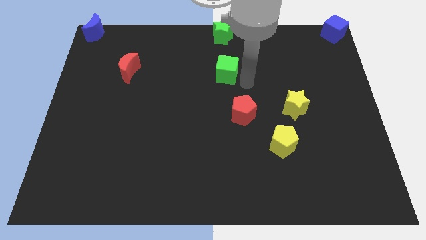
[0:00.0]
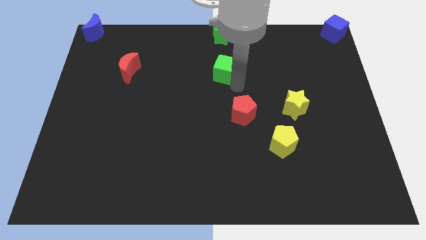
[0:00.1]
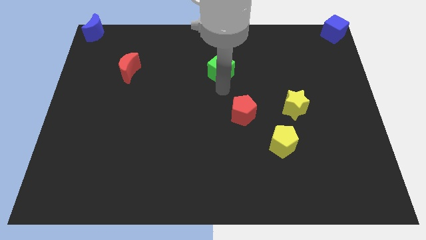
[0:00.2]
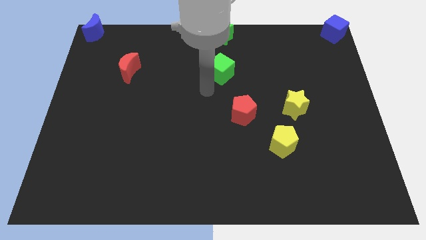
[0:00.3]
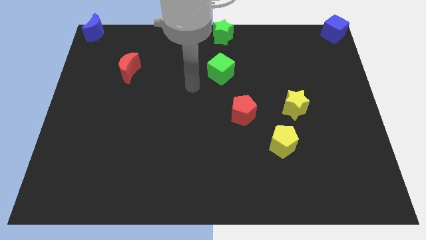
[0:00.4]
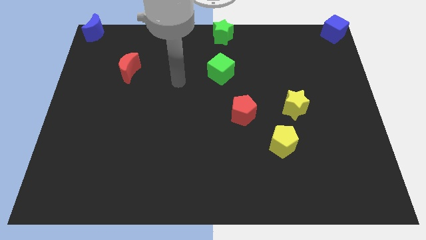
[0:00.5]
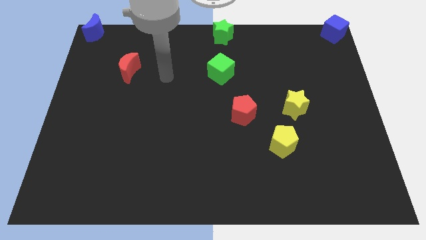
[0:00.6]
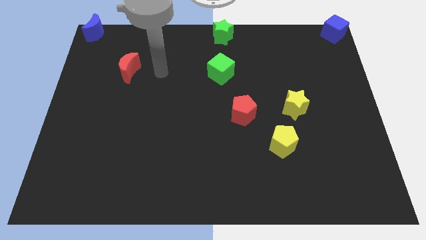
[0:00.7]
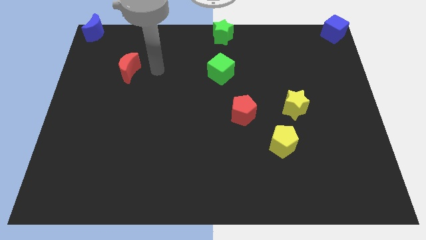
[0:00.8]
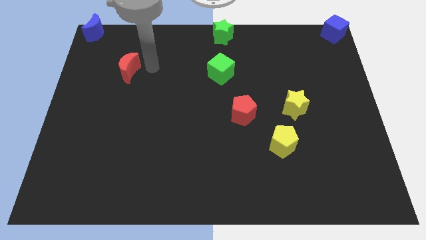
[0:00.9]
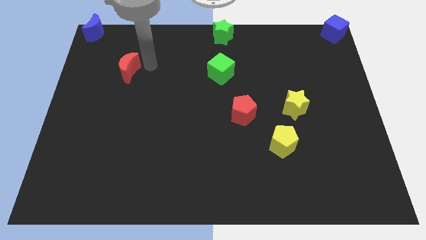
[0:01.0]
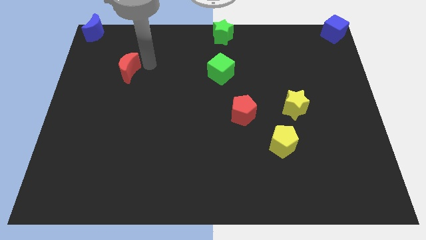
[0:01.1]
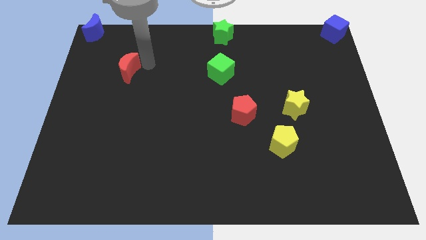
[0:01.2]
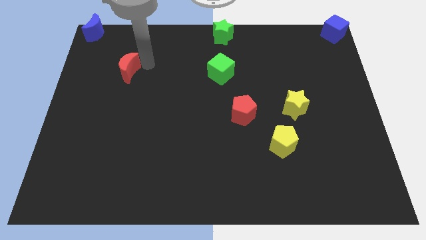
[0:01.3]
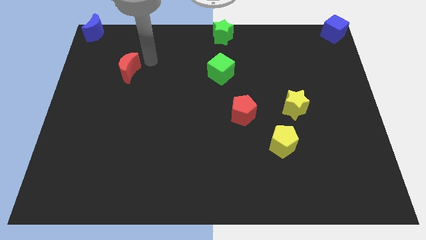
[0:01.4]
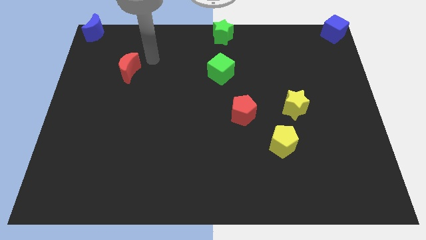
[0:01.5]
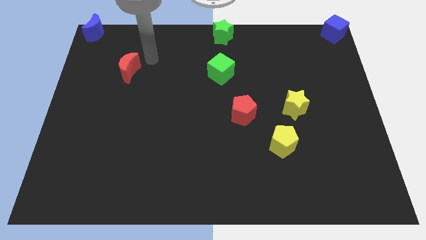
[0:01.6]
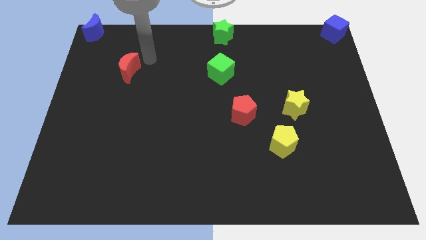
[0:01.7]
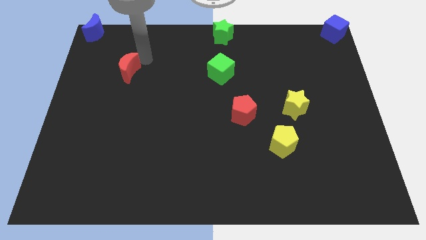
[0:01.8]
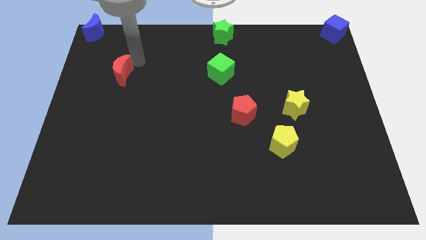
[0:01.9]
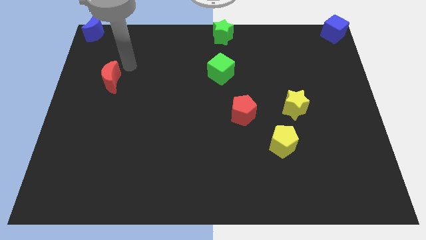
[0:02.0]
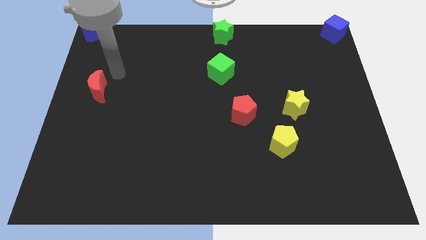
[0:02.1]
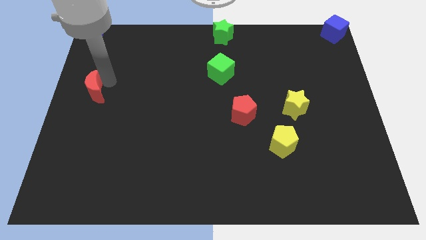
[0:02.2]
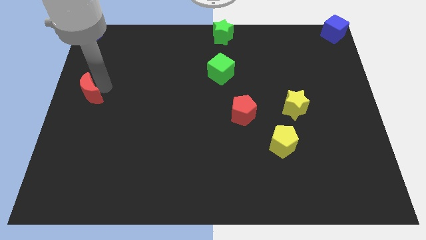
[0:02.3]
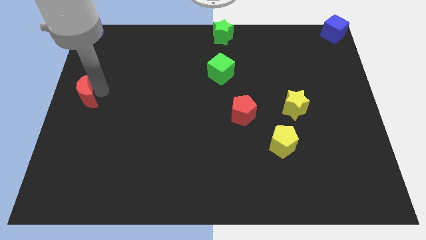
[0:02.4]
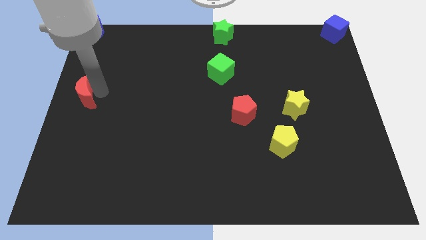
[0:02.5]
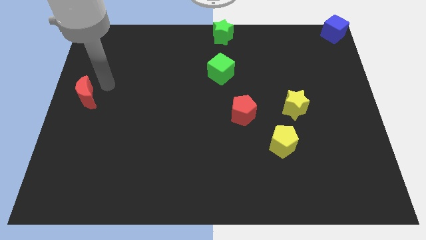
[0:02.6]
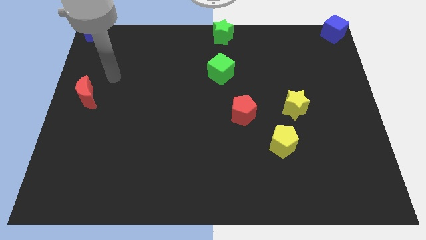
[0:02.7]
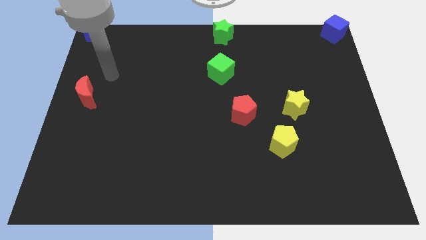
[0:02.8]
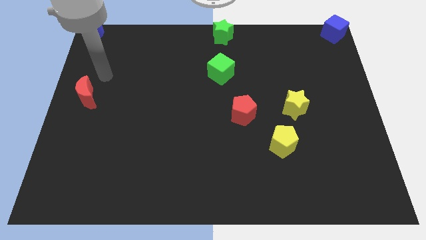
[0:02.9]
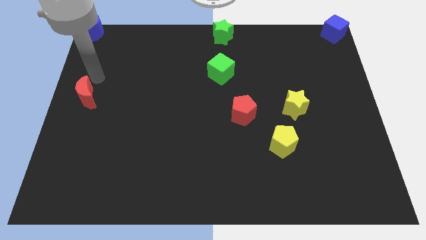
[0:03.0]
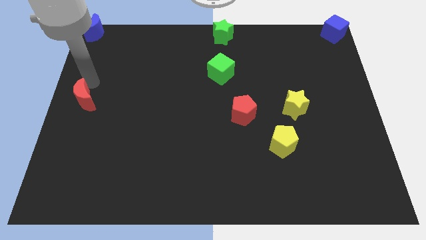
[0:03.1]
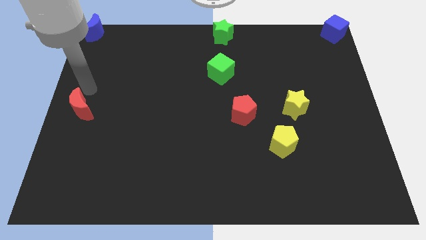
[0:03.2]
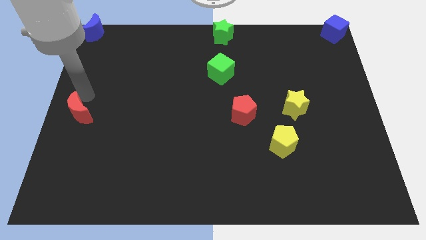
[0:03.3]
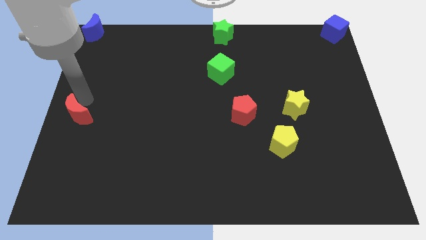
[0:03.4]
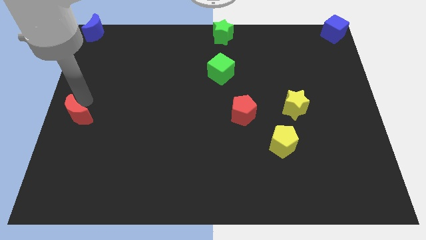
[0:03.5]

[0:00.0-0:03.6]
place the red crescent to the center left of the board

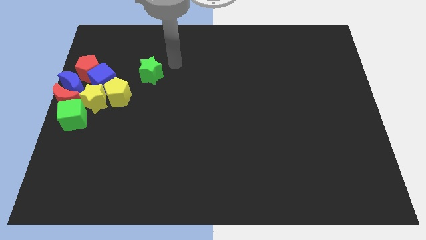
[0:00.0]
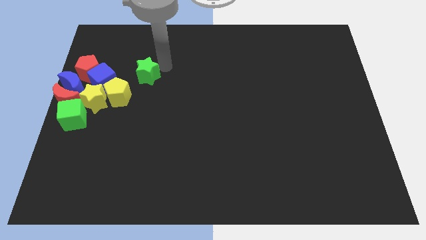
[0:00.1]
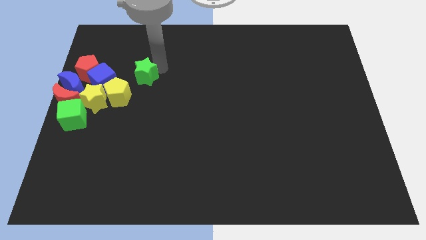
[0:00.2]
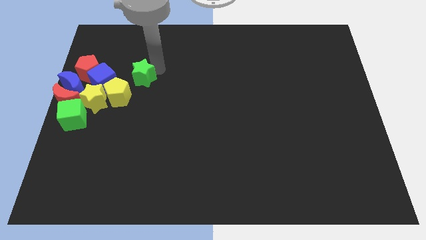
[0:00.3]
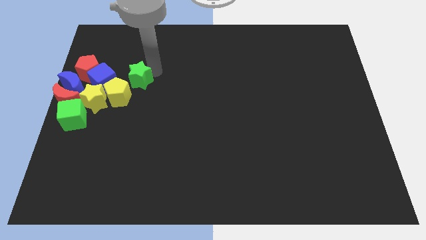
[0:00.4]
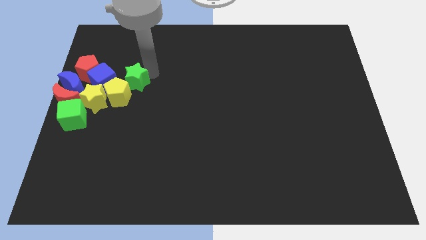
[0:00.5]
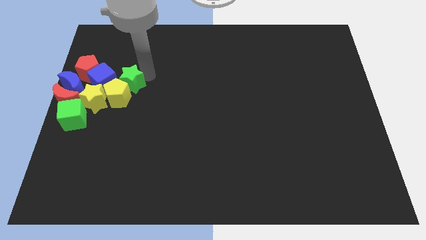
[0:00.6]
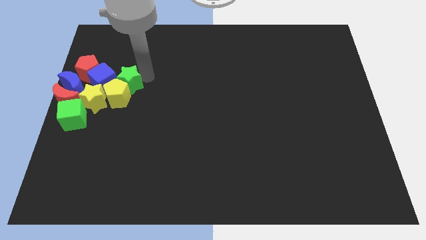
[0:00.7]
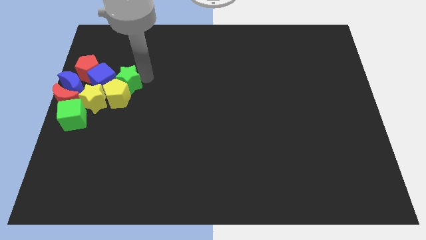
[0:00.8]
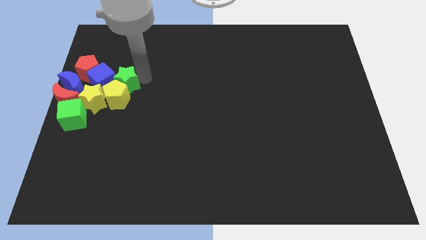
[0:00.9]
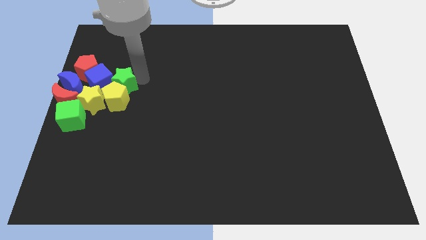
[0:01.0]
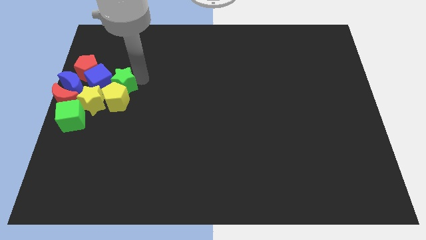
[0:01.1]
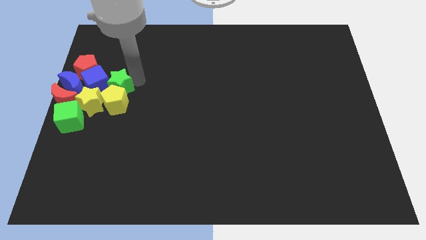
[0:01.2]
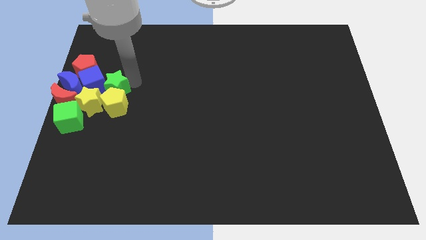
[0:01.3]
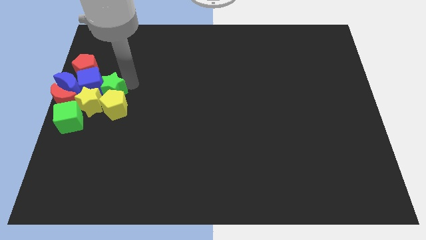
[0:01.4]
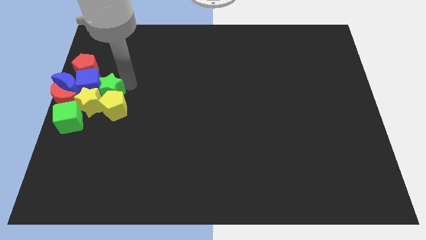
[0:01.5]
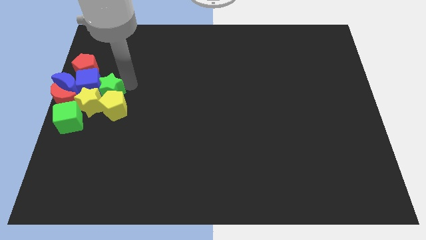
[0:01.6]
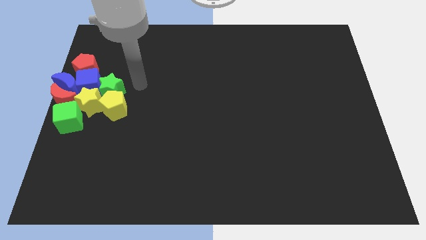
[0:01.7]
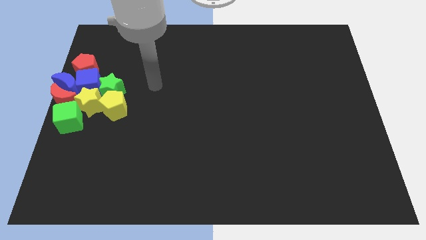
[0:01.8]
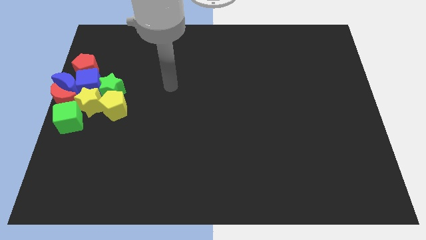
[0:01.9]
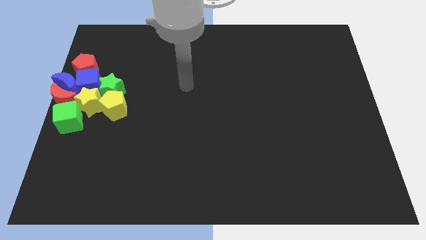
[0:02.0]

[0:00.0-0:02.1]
push the green star into the blue cube

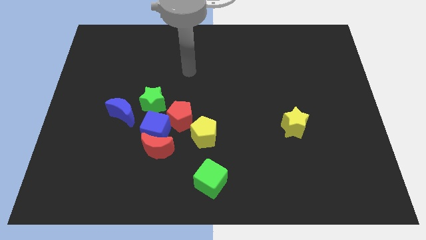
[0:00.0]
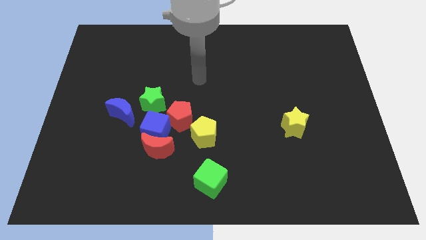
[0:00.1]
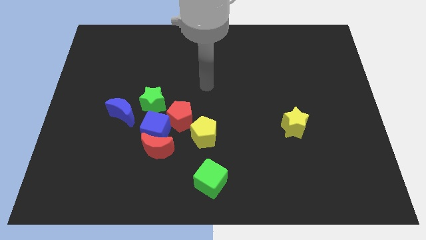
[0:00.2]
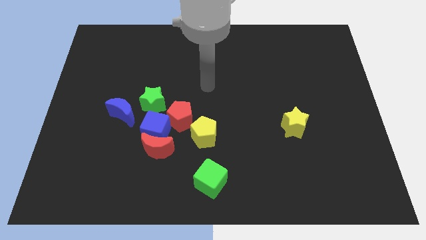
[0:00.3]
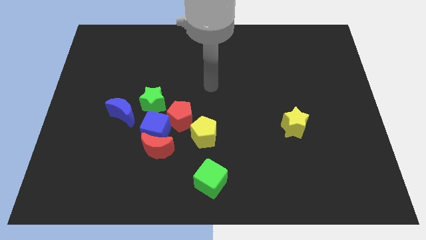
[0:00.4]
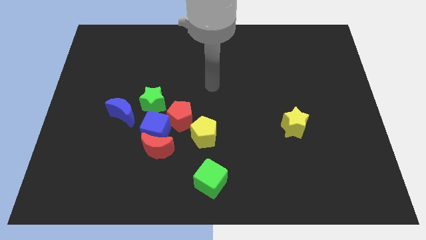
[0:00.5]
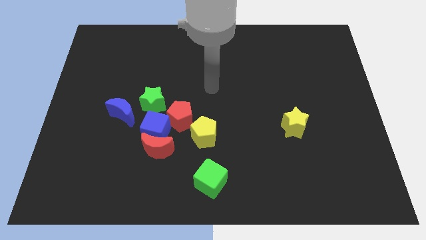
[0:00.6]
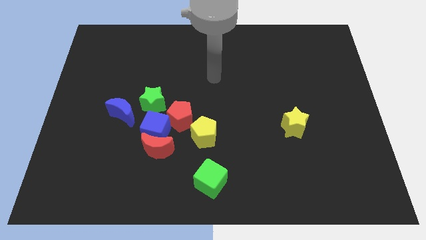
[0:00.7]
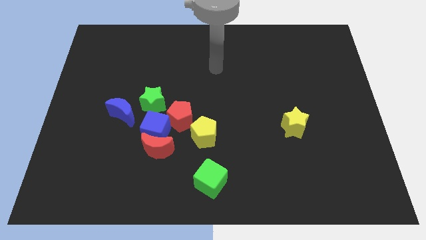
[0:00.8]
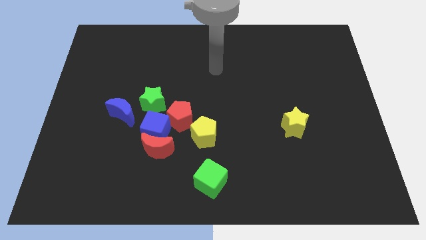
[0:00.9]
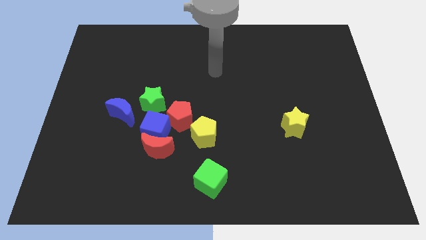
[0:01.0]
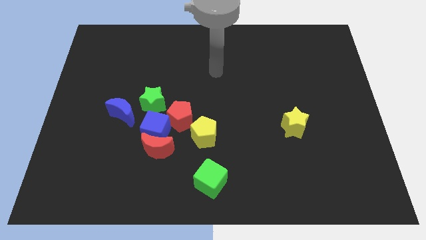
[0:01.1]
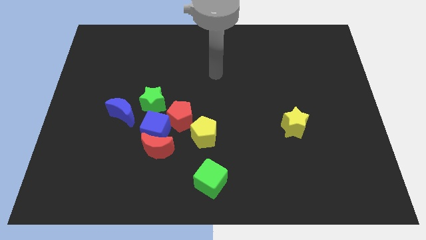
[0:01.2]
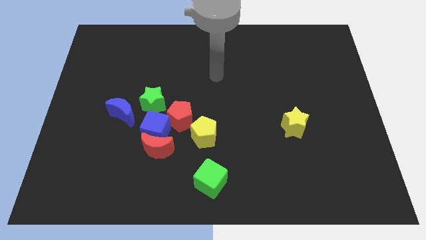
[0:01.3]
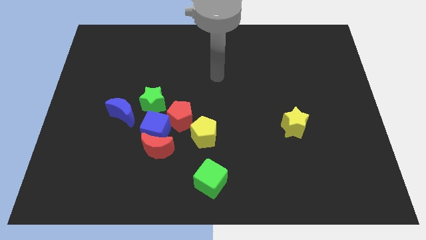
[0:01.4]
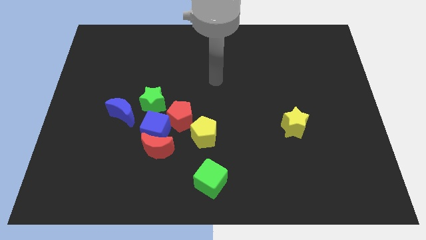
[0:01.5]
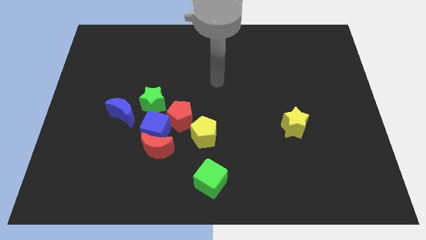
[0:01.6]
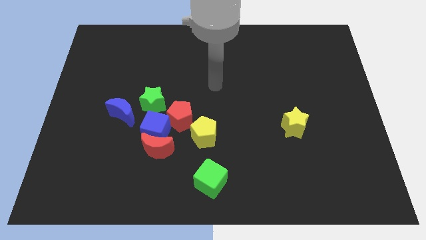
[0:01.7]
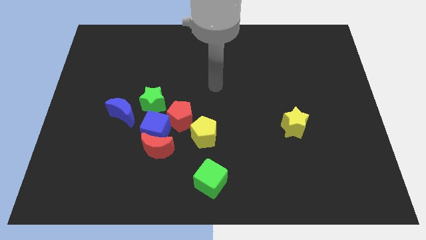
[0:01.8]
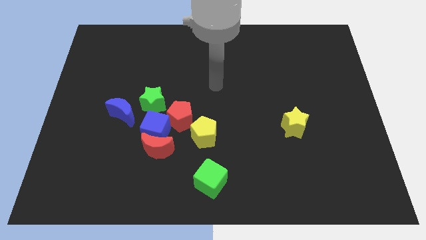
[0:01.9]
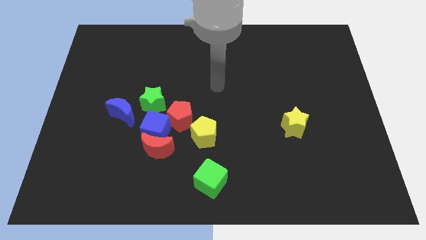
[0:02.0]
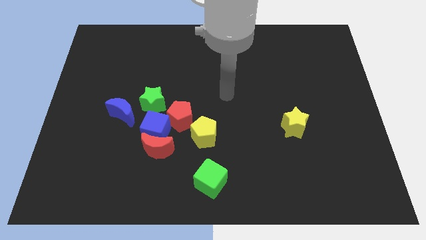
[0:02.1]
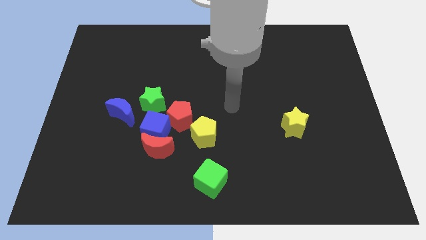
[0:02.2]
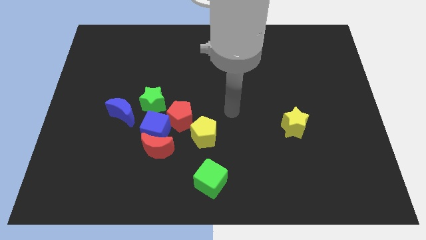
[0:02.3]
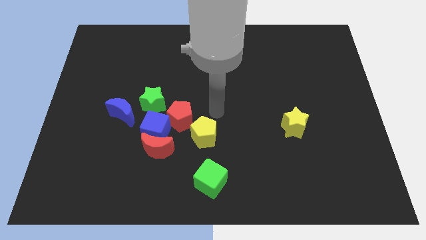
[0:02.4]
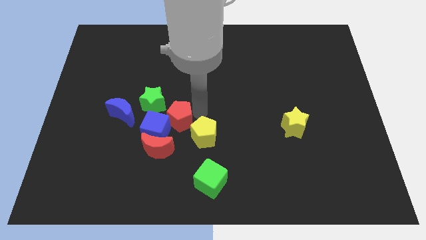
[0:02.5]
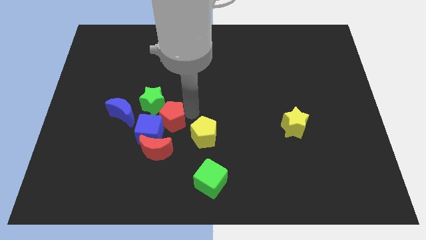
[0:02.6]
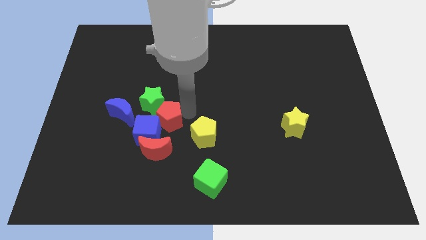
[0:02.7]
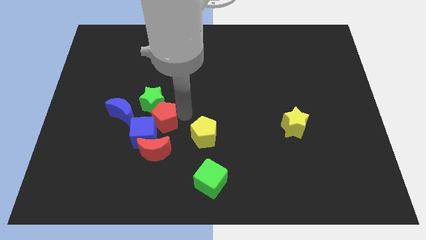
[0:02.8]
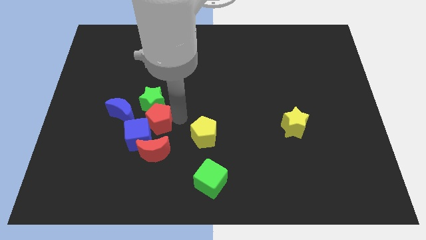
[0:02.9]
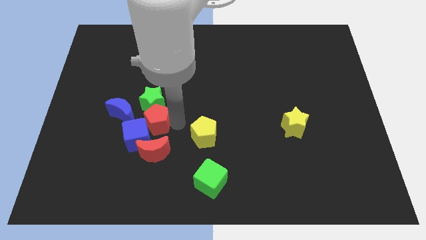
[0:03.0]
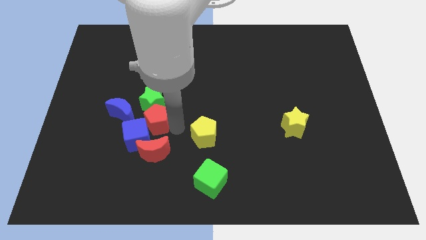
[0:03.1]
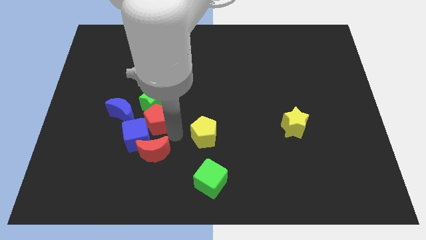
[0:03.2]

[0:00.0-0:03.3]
slide the red pentagon into the blue cube
